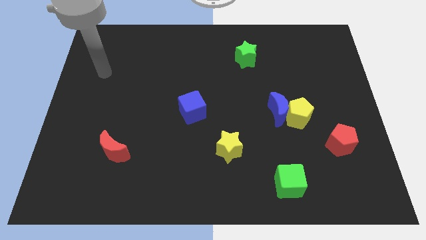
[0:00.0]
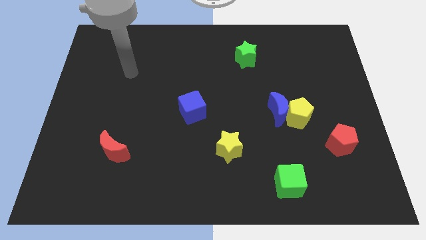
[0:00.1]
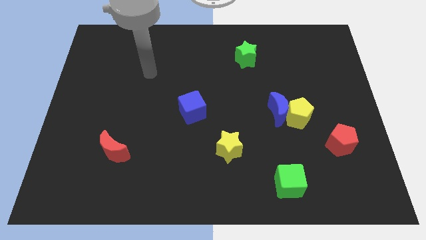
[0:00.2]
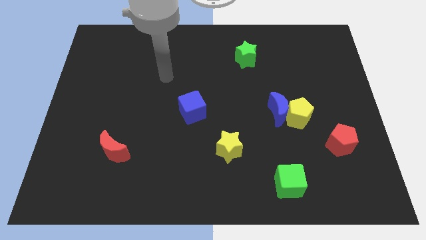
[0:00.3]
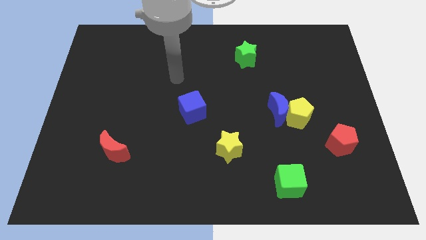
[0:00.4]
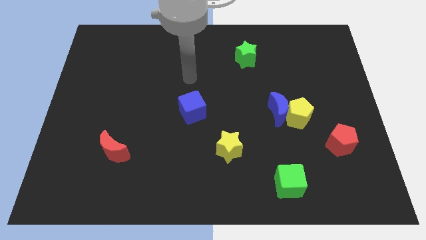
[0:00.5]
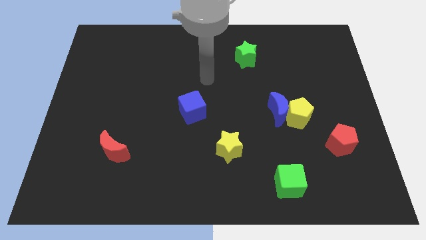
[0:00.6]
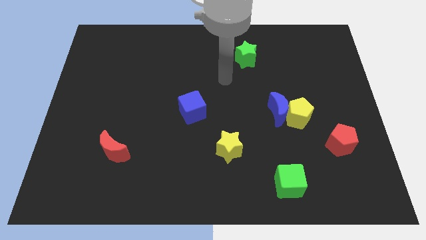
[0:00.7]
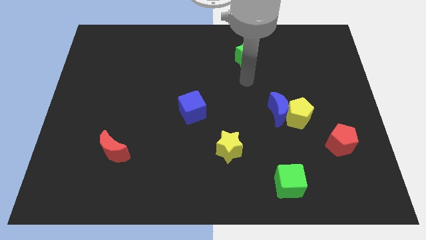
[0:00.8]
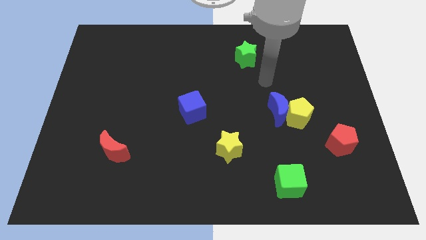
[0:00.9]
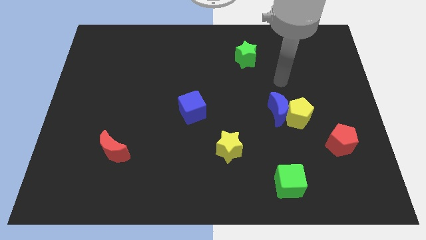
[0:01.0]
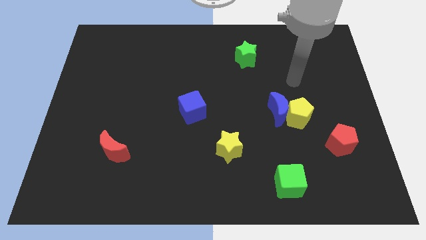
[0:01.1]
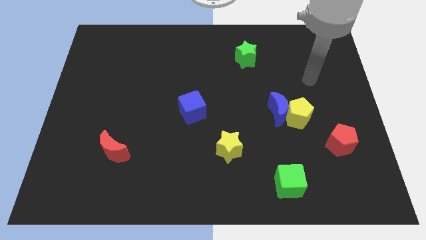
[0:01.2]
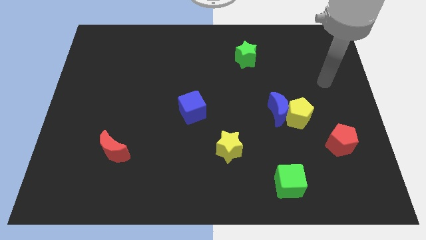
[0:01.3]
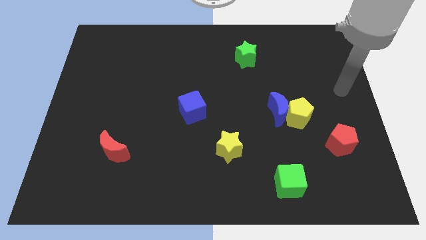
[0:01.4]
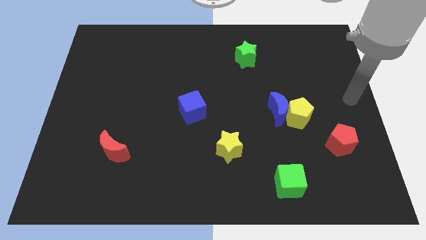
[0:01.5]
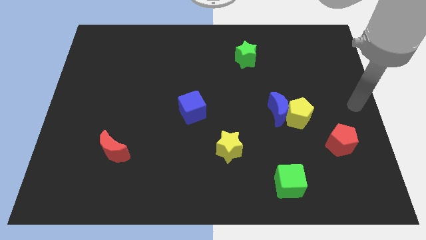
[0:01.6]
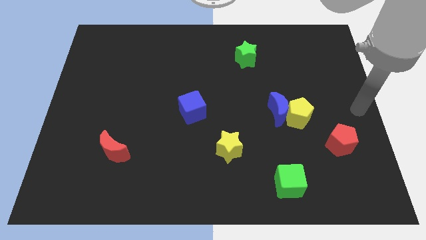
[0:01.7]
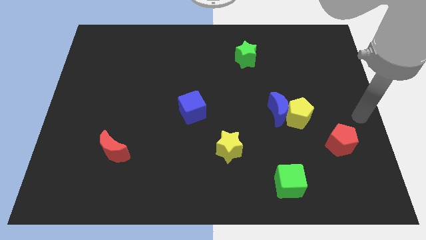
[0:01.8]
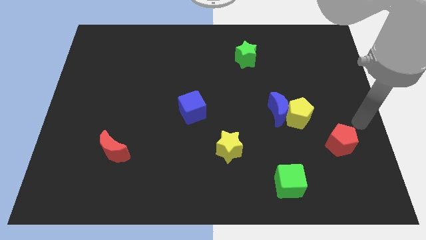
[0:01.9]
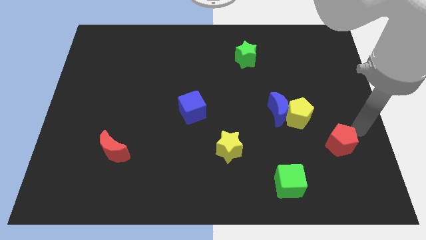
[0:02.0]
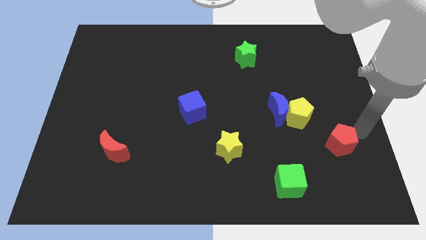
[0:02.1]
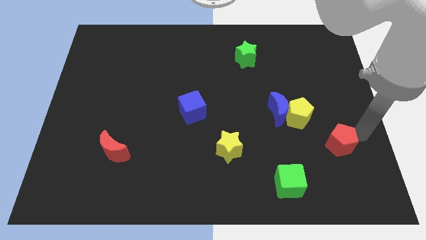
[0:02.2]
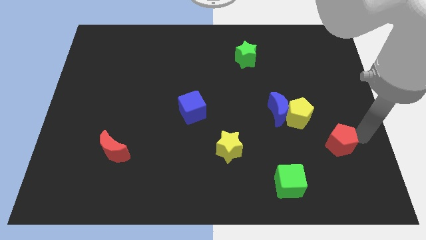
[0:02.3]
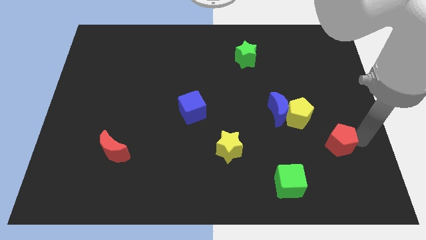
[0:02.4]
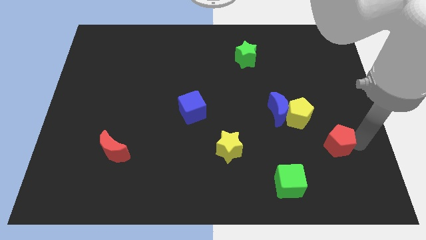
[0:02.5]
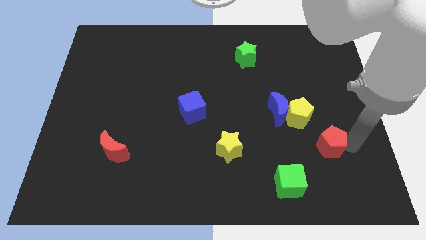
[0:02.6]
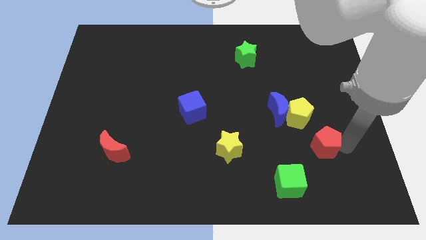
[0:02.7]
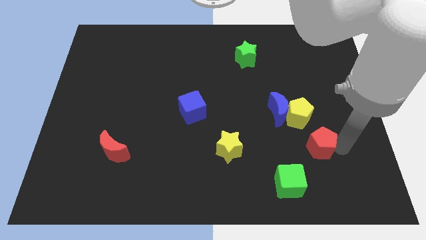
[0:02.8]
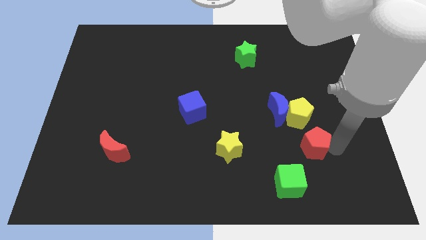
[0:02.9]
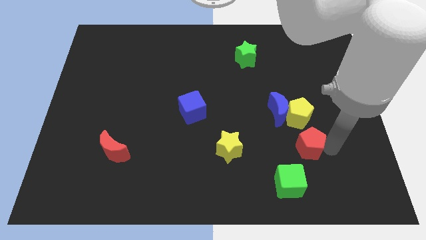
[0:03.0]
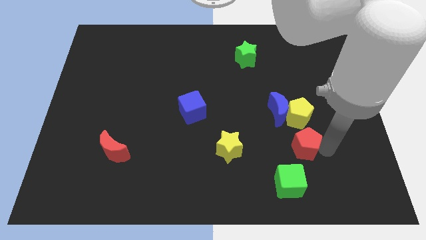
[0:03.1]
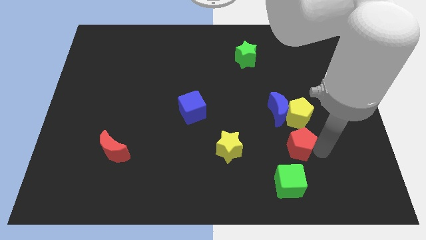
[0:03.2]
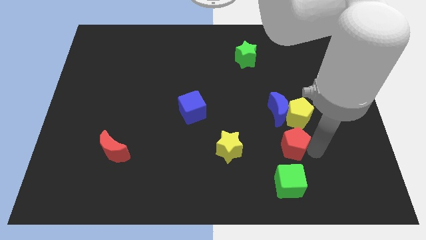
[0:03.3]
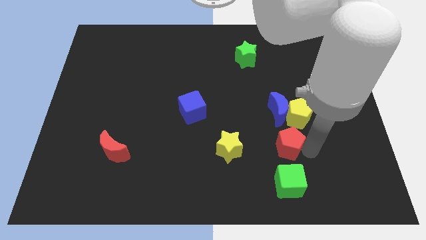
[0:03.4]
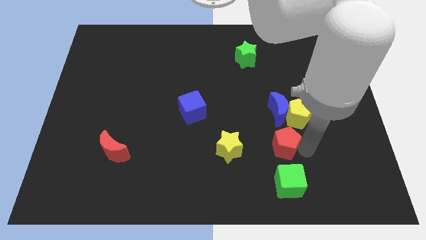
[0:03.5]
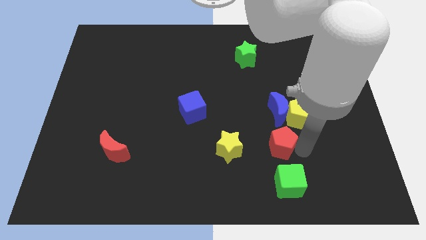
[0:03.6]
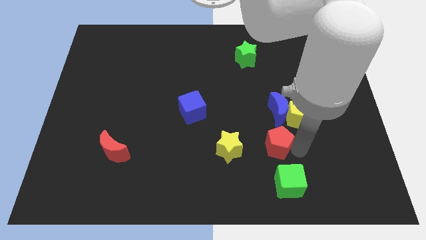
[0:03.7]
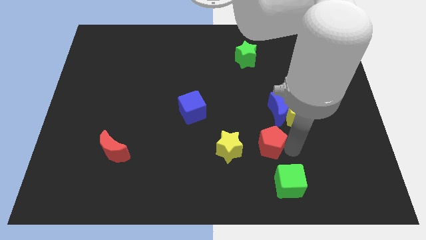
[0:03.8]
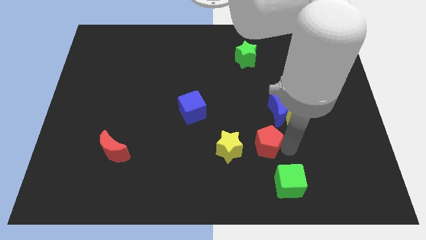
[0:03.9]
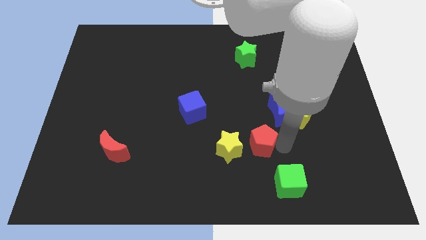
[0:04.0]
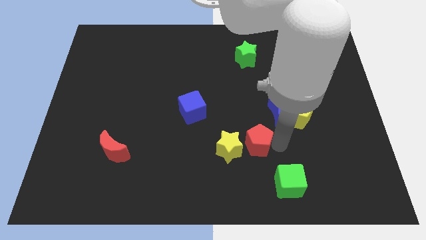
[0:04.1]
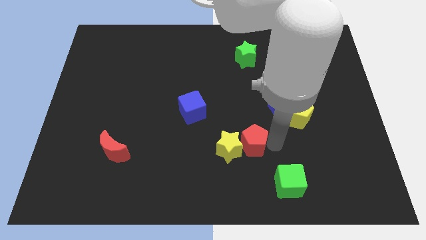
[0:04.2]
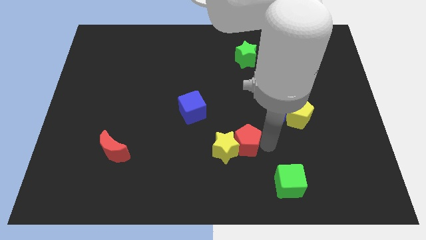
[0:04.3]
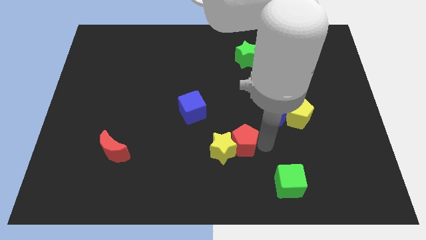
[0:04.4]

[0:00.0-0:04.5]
slide the red pentagon to the yellow star

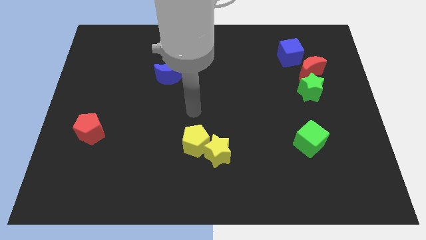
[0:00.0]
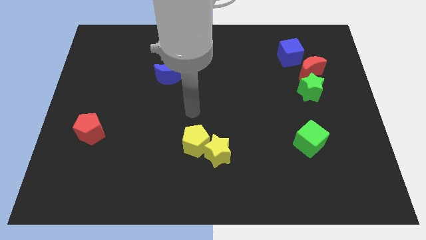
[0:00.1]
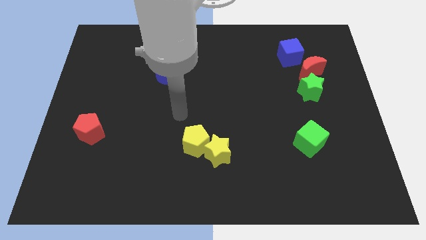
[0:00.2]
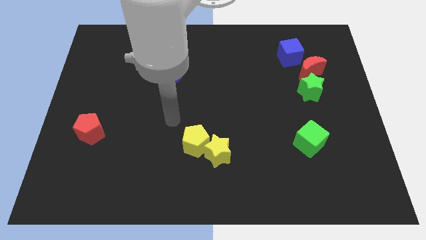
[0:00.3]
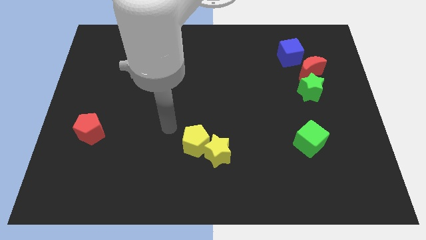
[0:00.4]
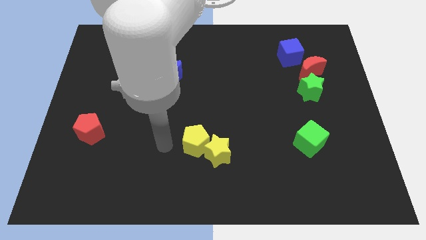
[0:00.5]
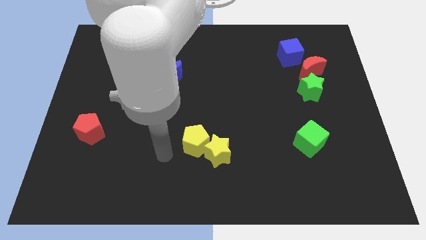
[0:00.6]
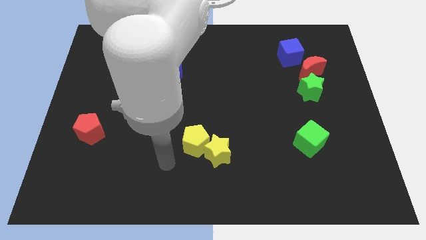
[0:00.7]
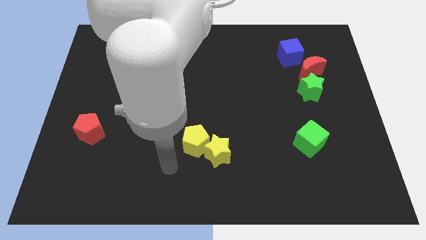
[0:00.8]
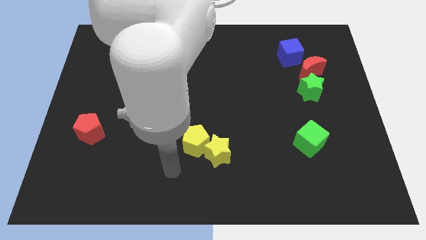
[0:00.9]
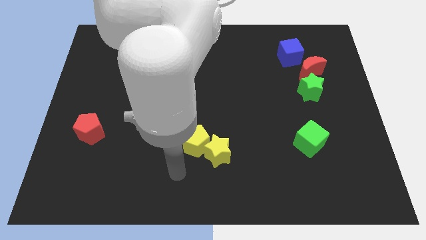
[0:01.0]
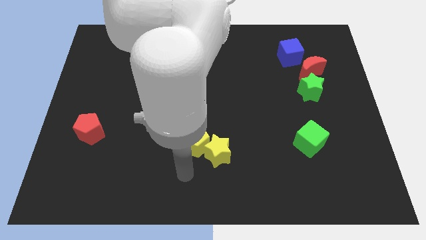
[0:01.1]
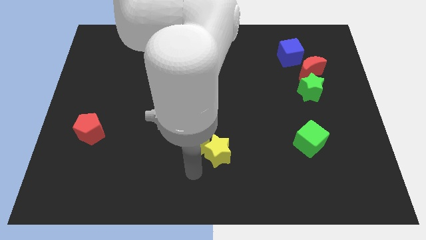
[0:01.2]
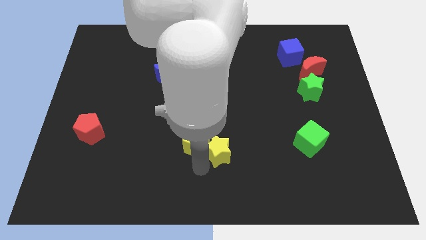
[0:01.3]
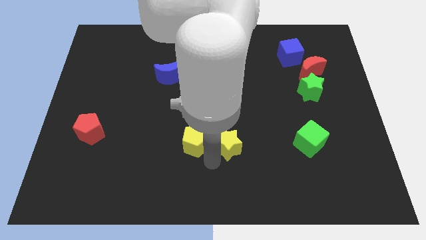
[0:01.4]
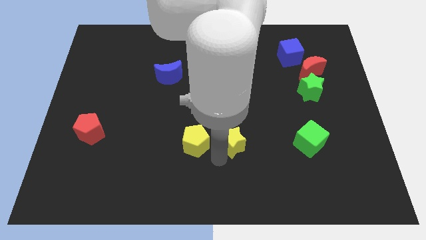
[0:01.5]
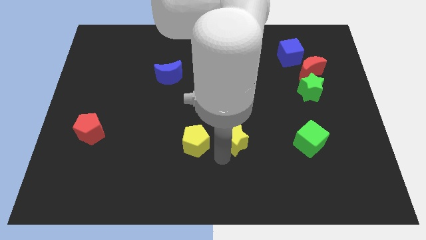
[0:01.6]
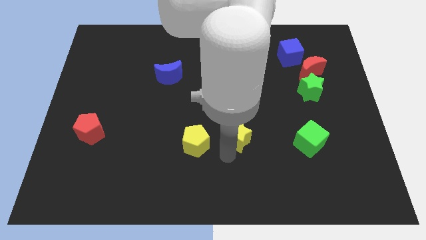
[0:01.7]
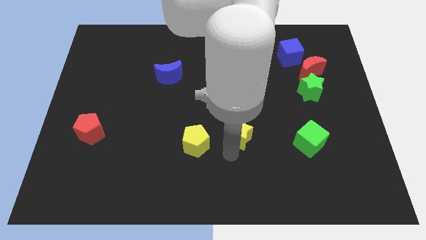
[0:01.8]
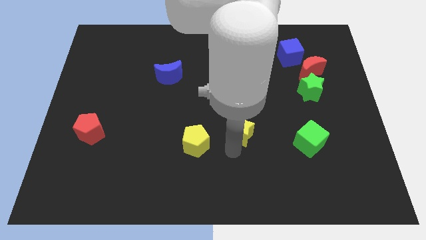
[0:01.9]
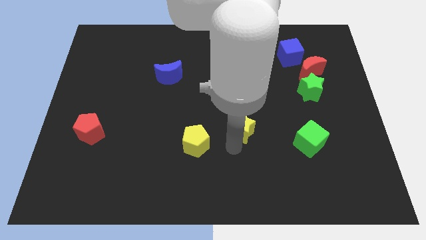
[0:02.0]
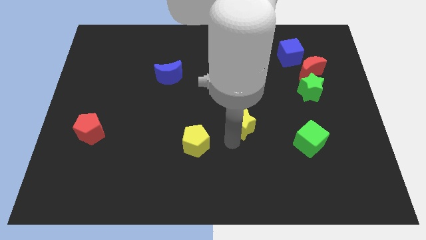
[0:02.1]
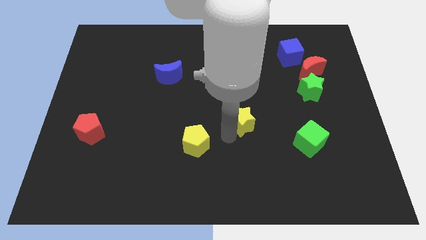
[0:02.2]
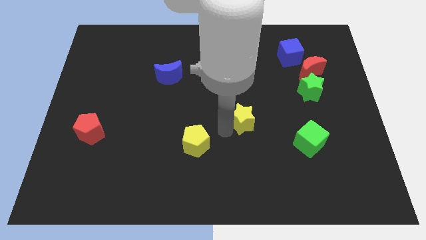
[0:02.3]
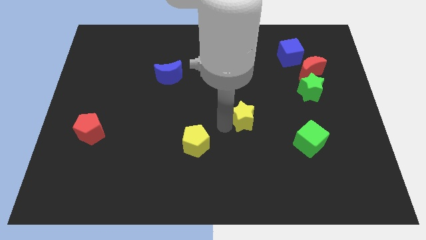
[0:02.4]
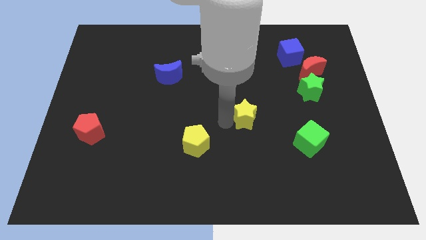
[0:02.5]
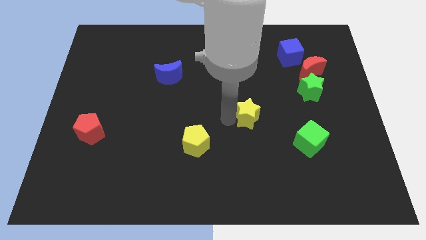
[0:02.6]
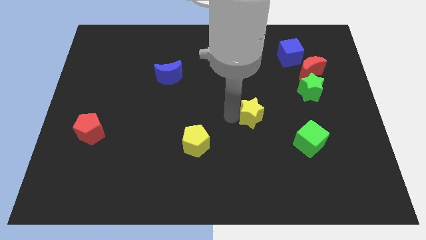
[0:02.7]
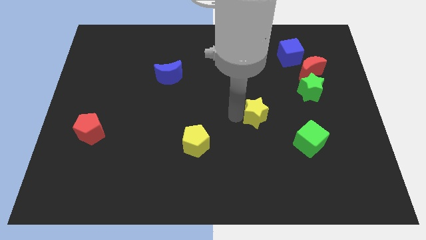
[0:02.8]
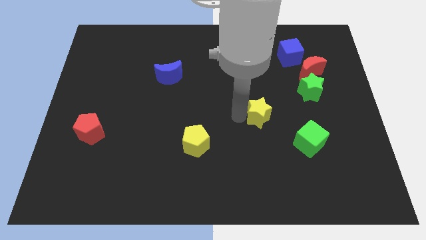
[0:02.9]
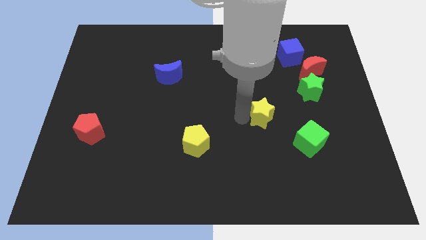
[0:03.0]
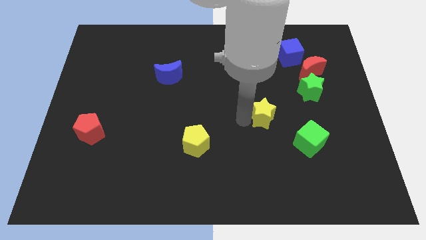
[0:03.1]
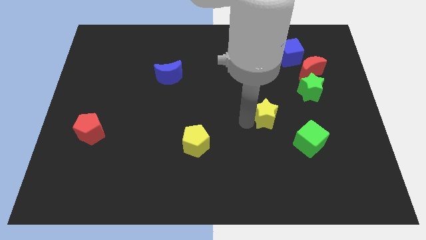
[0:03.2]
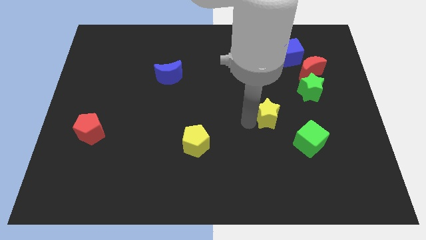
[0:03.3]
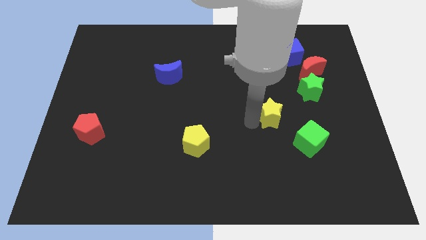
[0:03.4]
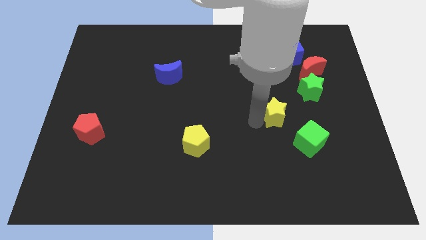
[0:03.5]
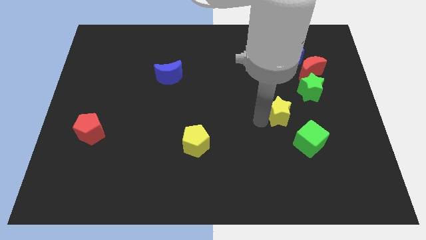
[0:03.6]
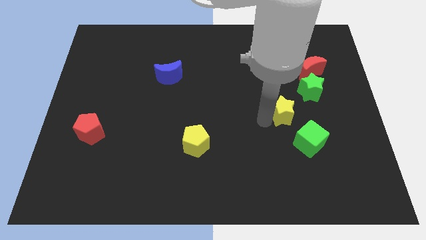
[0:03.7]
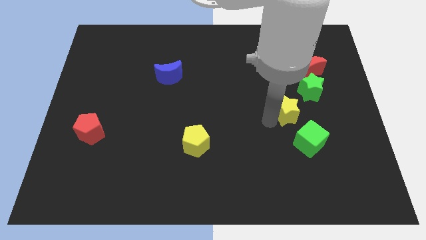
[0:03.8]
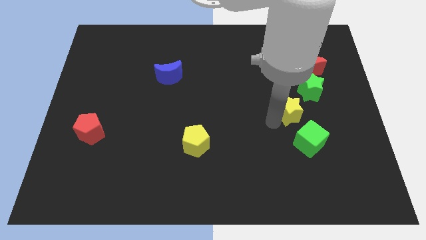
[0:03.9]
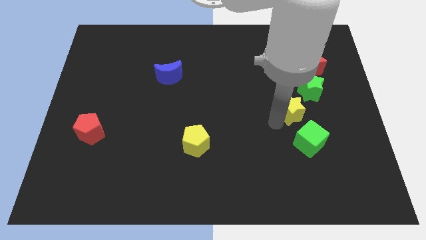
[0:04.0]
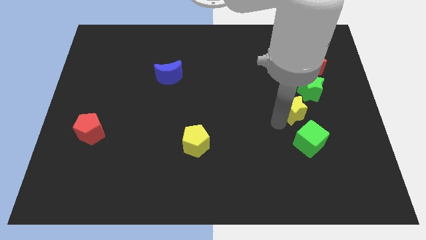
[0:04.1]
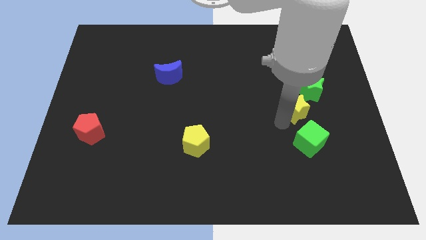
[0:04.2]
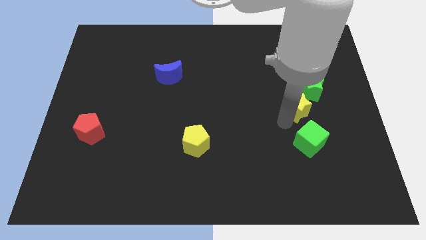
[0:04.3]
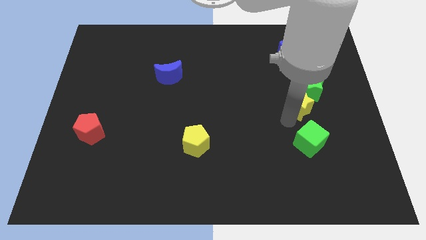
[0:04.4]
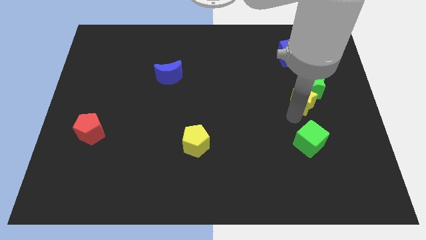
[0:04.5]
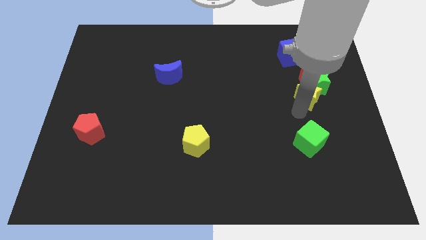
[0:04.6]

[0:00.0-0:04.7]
slide the yellow star close to the green star
